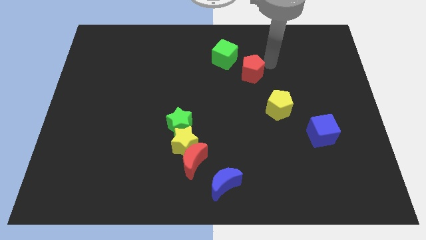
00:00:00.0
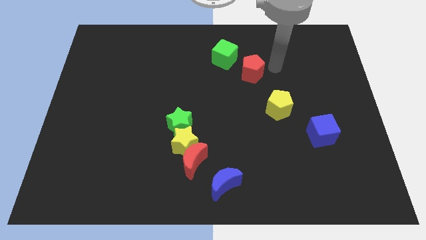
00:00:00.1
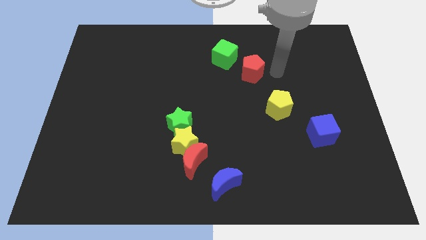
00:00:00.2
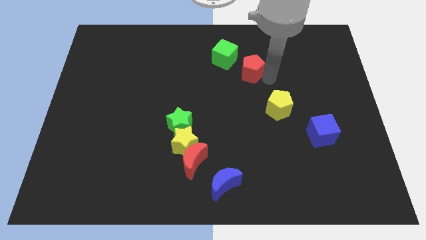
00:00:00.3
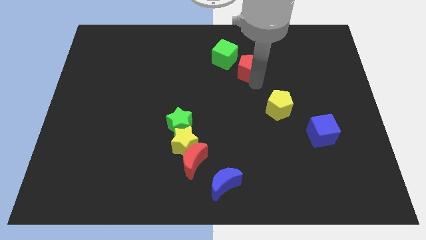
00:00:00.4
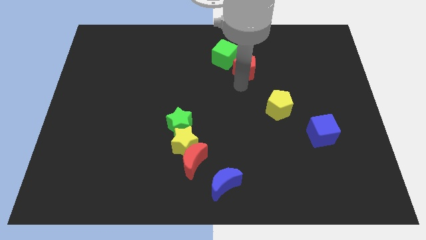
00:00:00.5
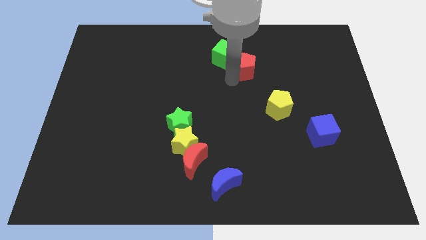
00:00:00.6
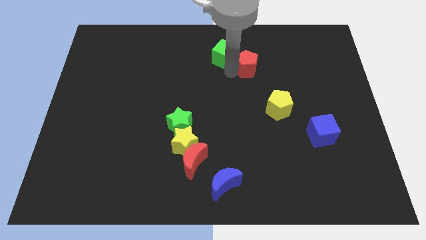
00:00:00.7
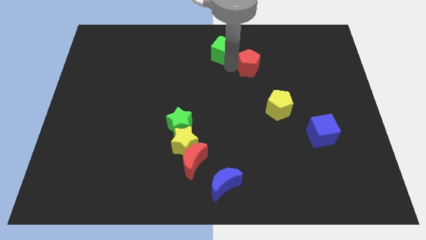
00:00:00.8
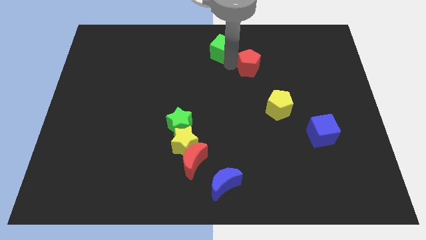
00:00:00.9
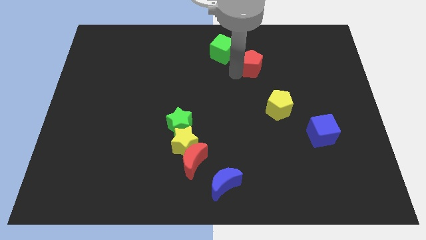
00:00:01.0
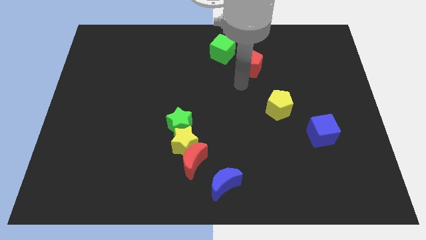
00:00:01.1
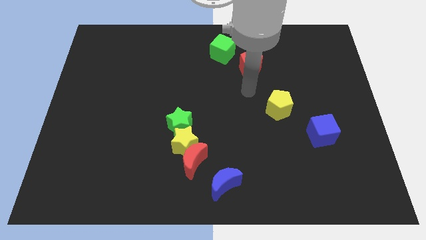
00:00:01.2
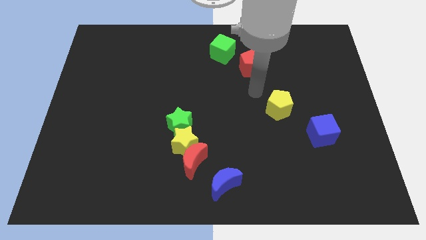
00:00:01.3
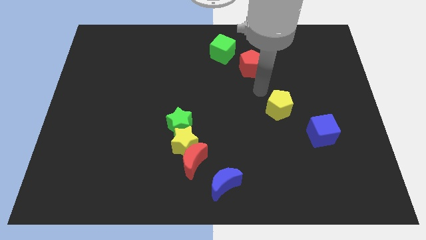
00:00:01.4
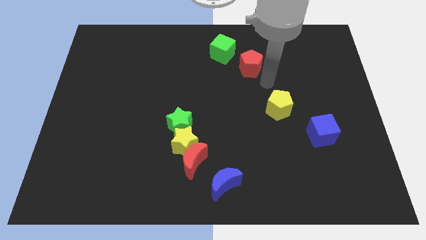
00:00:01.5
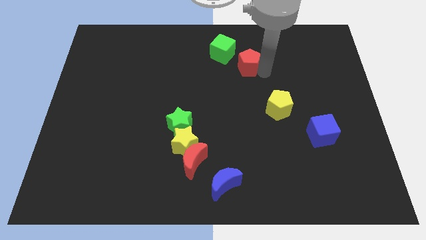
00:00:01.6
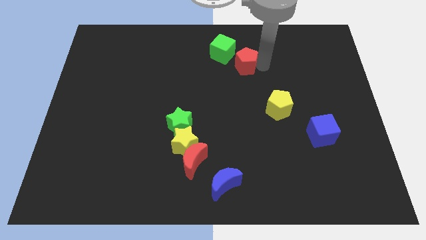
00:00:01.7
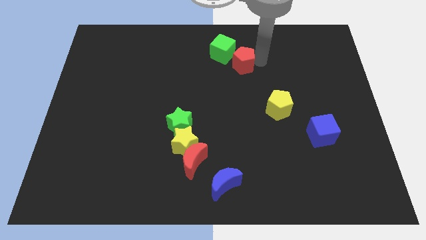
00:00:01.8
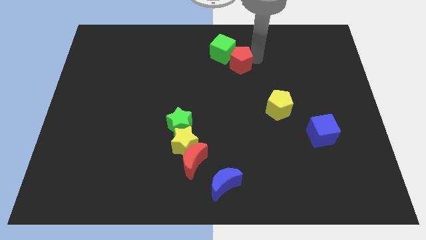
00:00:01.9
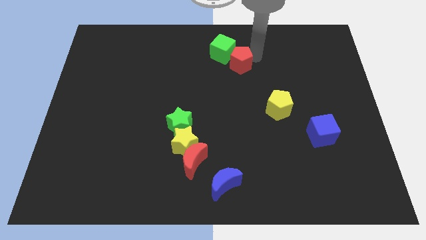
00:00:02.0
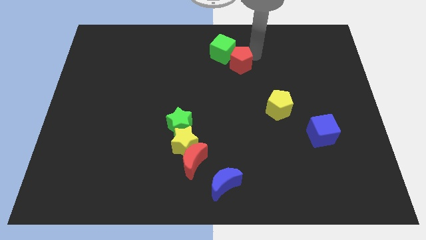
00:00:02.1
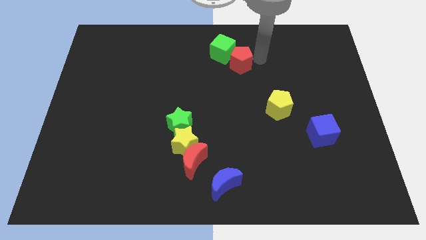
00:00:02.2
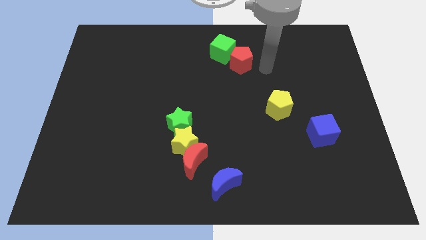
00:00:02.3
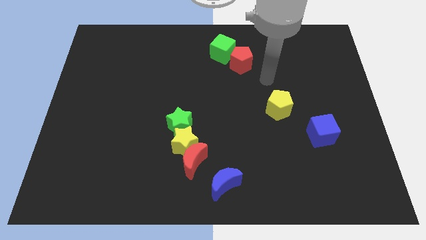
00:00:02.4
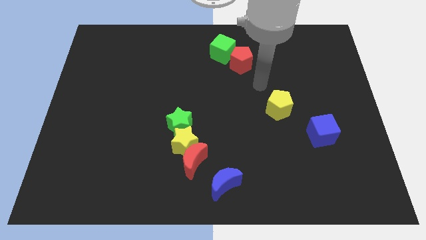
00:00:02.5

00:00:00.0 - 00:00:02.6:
push the red pentagon into the green cube

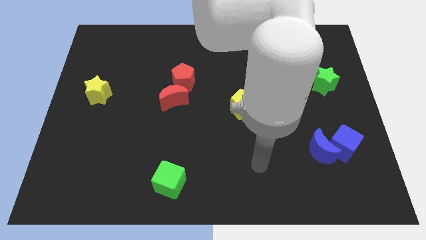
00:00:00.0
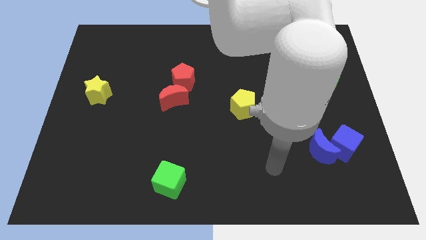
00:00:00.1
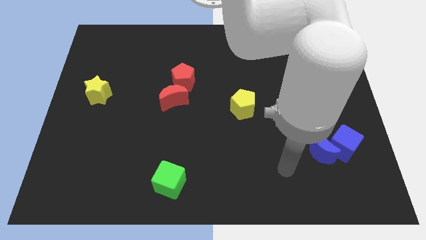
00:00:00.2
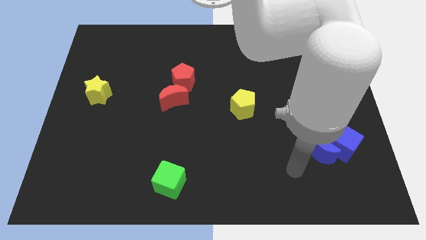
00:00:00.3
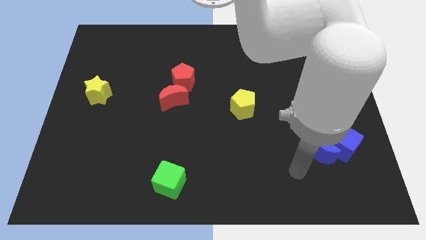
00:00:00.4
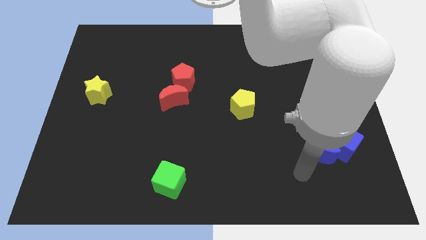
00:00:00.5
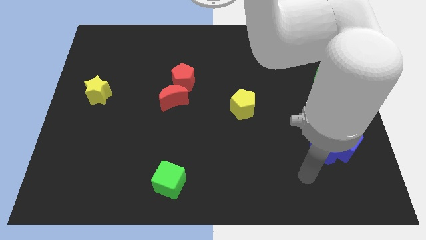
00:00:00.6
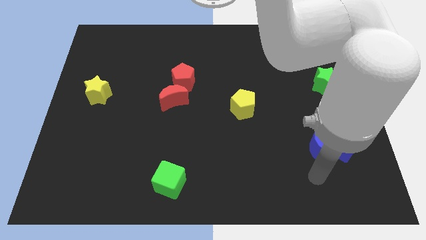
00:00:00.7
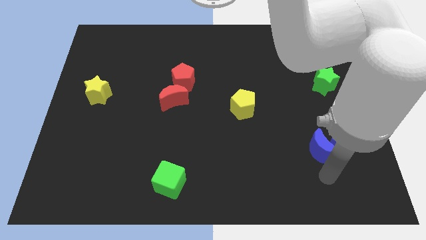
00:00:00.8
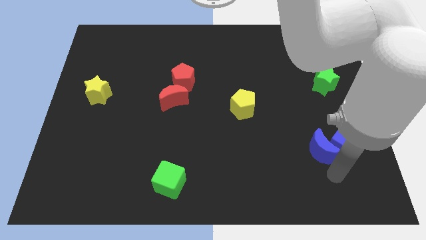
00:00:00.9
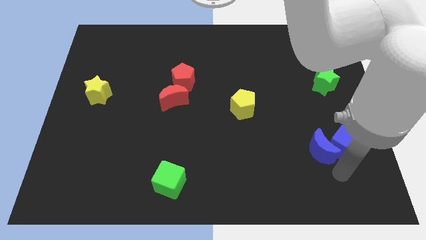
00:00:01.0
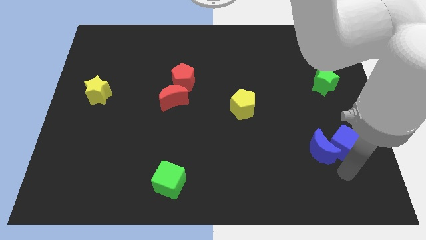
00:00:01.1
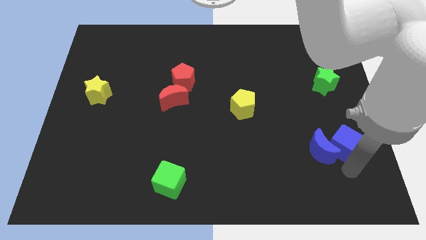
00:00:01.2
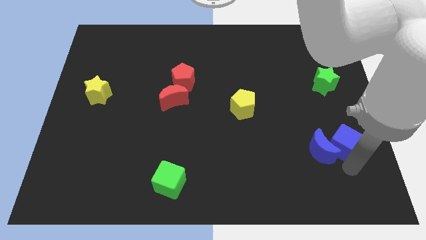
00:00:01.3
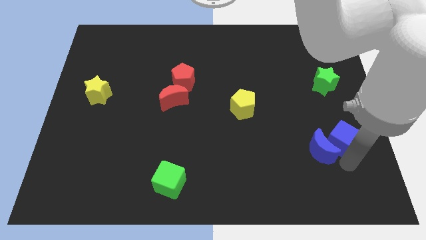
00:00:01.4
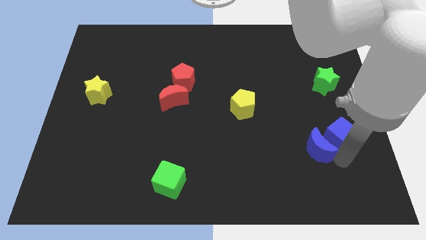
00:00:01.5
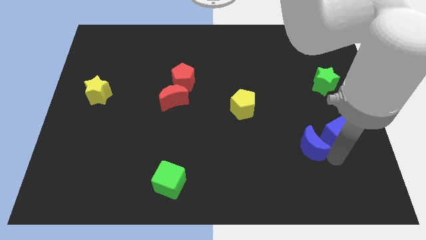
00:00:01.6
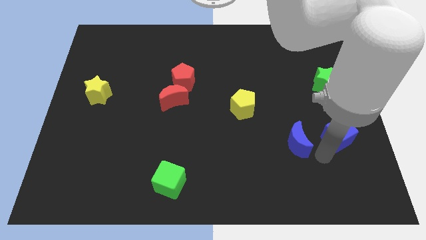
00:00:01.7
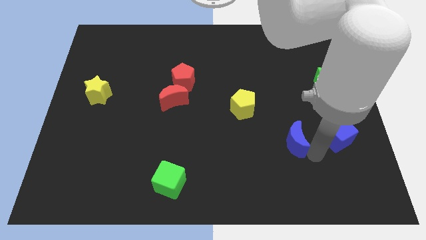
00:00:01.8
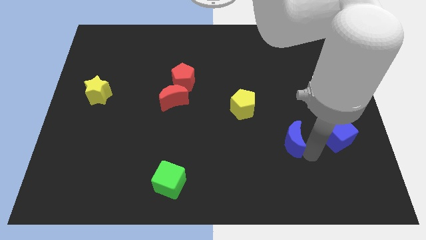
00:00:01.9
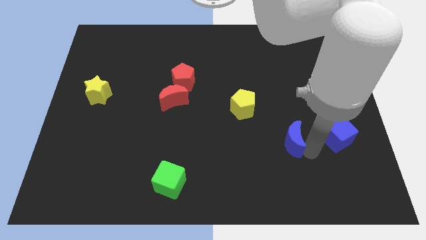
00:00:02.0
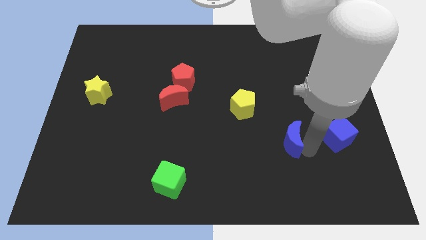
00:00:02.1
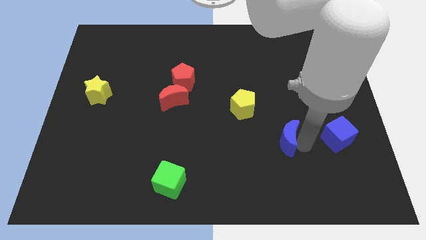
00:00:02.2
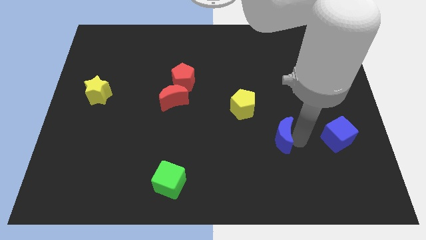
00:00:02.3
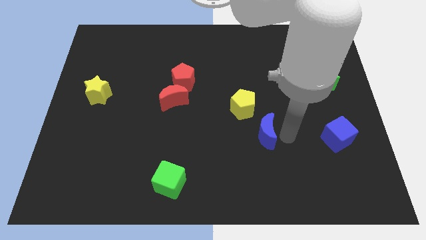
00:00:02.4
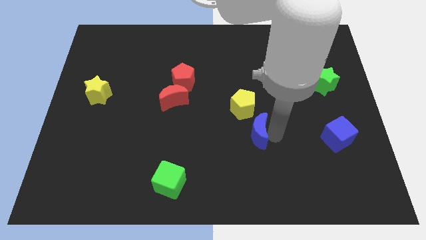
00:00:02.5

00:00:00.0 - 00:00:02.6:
push the blue crescent below the yellow pentagan

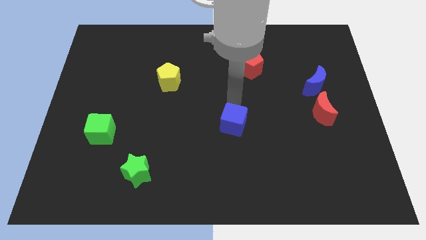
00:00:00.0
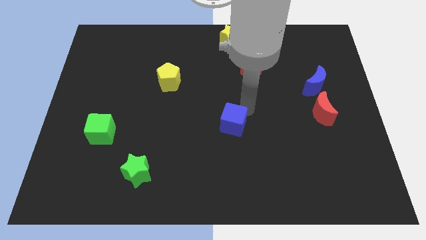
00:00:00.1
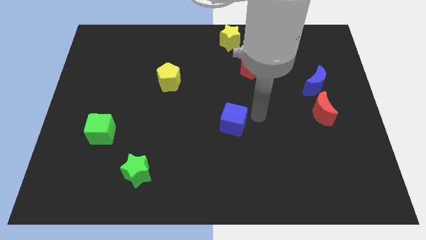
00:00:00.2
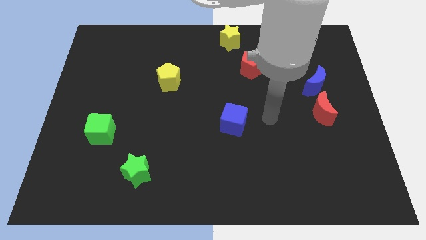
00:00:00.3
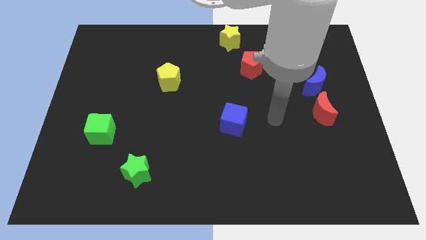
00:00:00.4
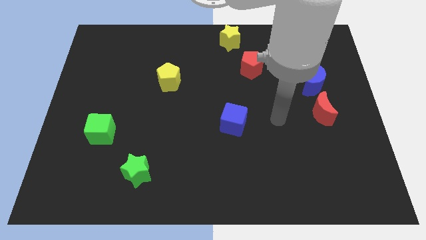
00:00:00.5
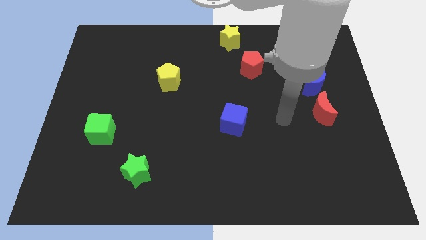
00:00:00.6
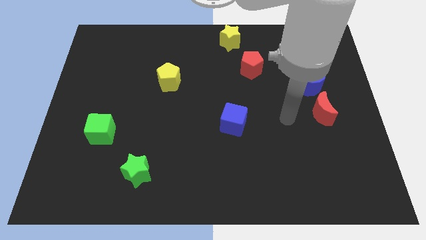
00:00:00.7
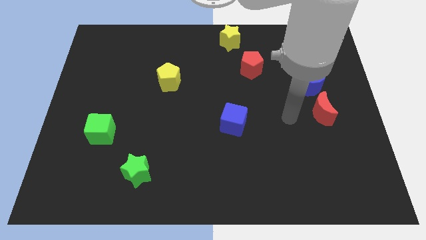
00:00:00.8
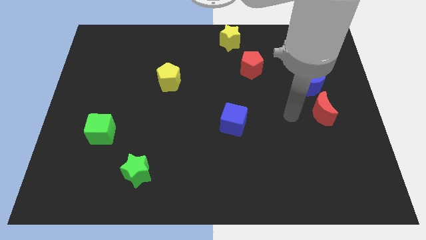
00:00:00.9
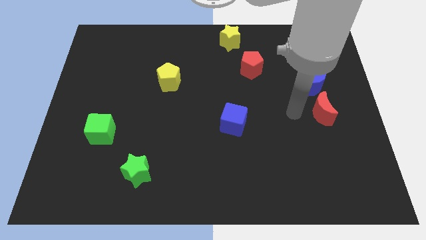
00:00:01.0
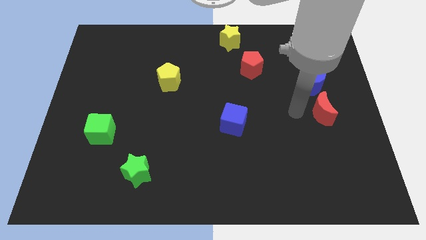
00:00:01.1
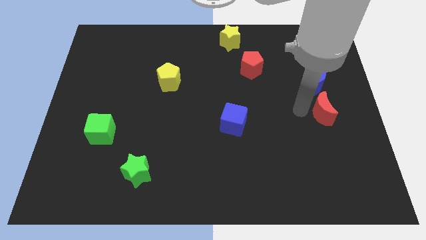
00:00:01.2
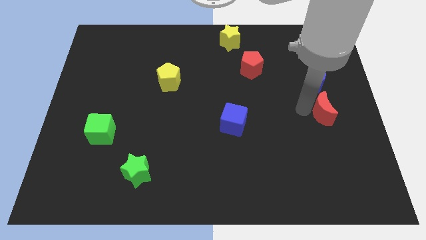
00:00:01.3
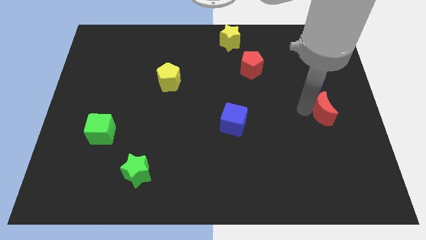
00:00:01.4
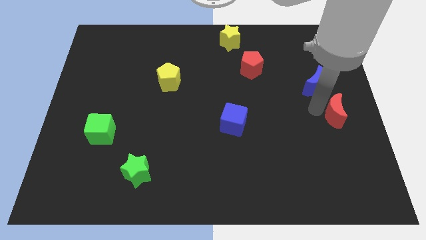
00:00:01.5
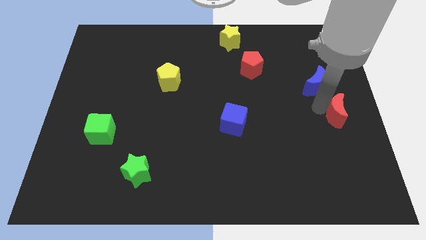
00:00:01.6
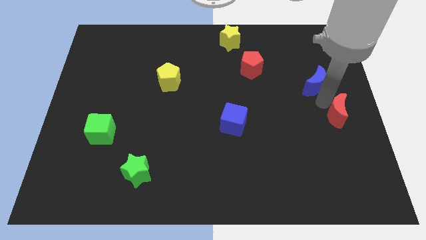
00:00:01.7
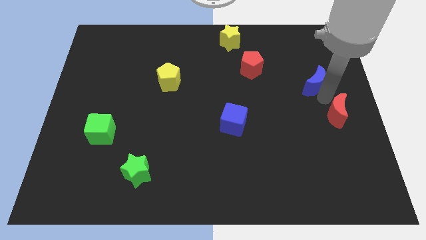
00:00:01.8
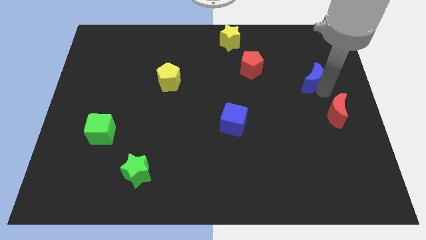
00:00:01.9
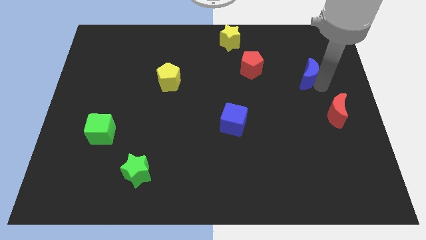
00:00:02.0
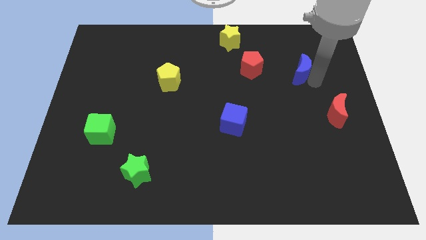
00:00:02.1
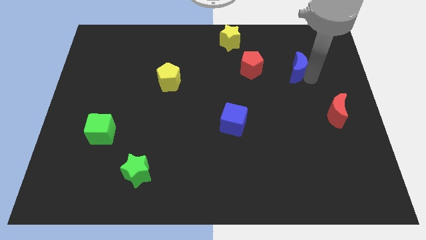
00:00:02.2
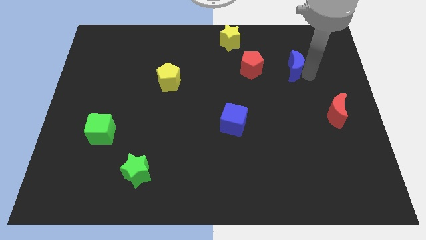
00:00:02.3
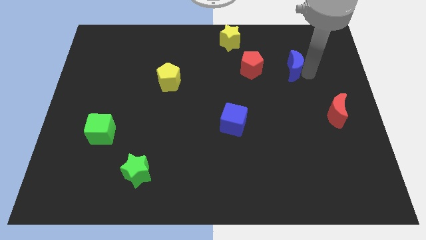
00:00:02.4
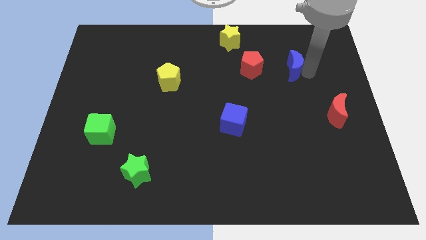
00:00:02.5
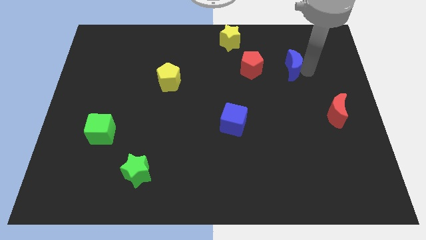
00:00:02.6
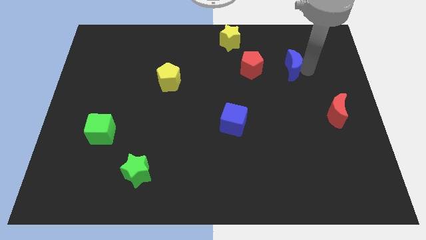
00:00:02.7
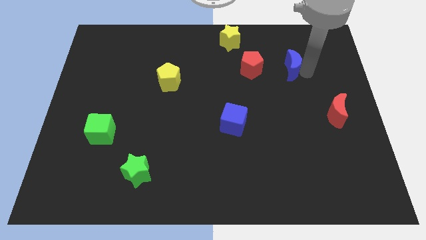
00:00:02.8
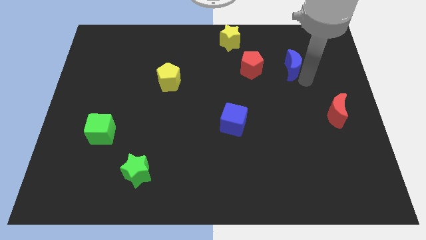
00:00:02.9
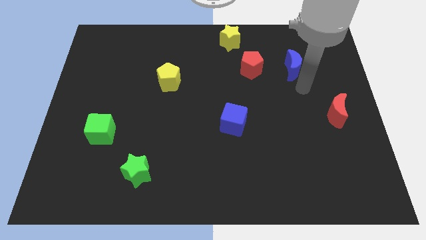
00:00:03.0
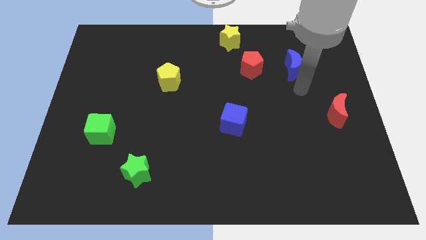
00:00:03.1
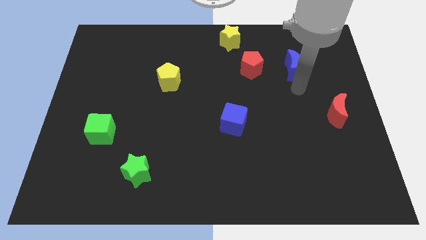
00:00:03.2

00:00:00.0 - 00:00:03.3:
move the blue crescent to the right of the red pentagon

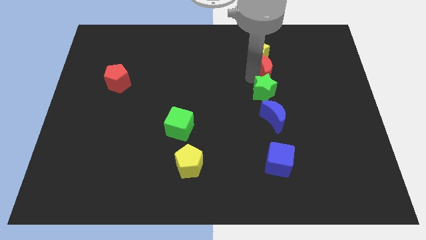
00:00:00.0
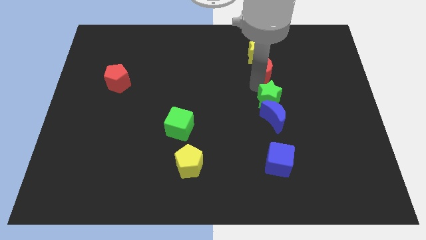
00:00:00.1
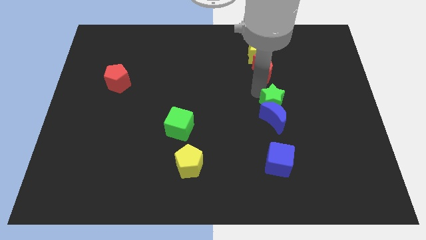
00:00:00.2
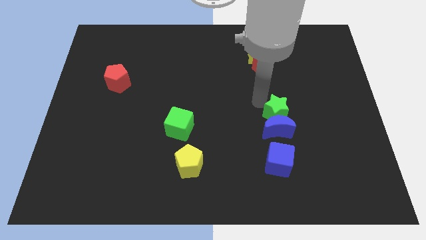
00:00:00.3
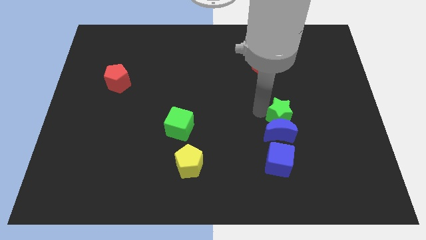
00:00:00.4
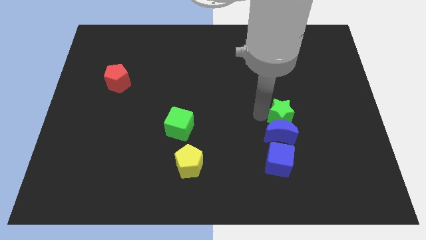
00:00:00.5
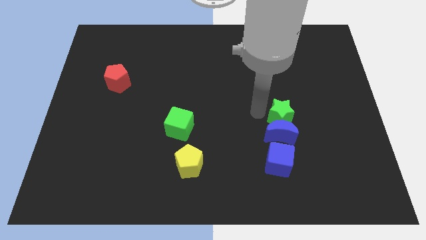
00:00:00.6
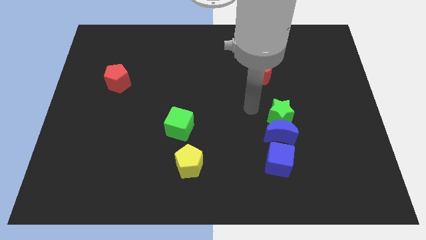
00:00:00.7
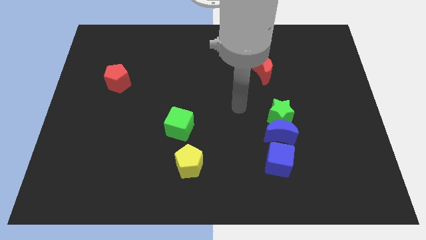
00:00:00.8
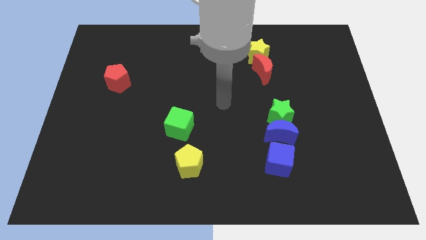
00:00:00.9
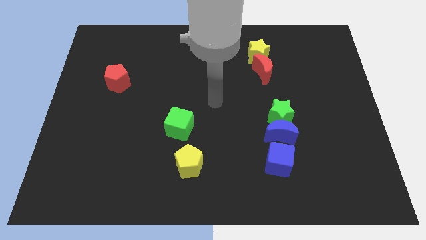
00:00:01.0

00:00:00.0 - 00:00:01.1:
move blue crescent with the green star
